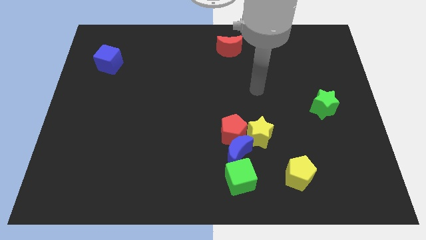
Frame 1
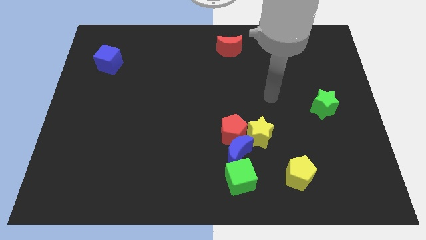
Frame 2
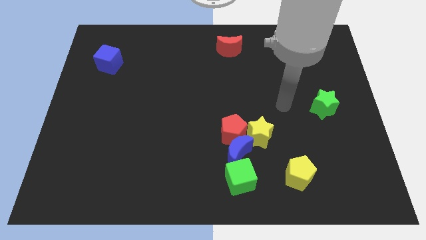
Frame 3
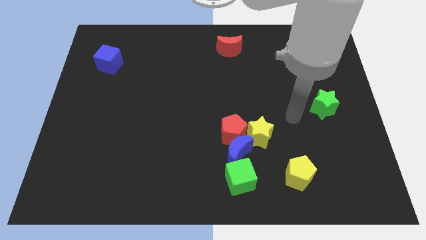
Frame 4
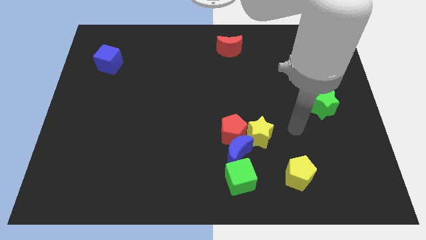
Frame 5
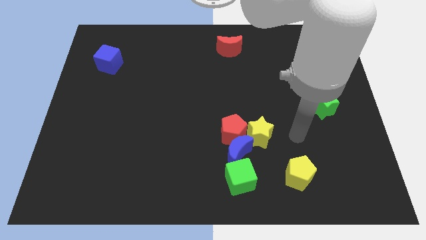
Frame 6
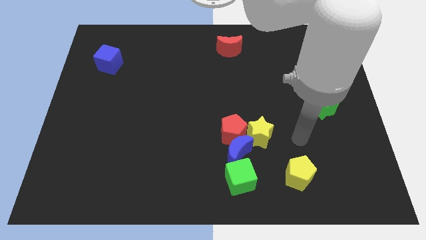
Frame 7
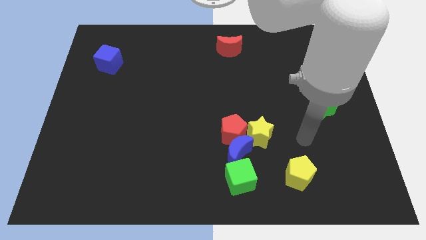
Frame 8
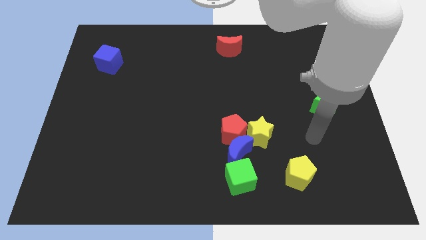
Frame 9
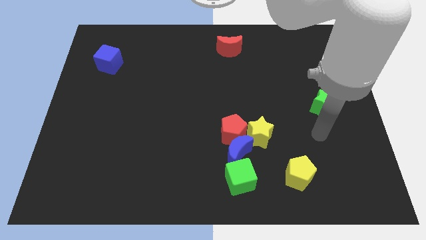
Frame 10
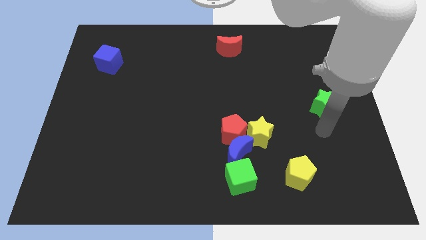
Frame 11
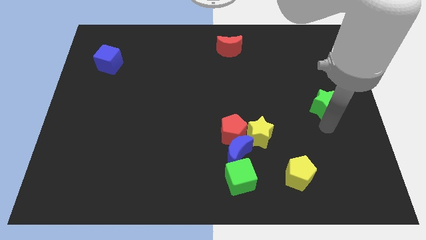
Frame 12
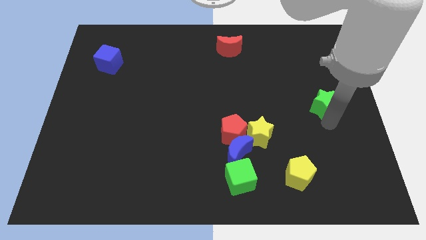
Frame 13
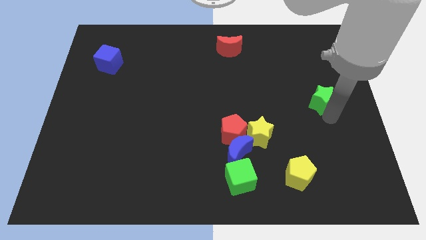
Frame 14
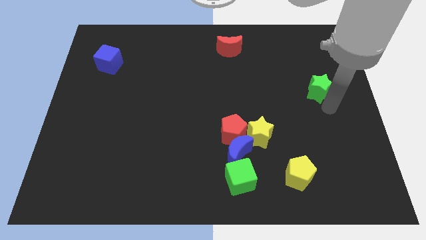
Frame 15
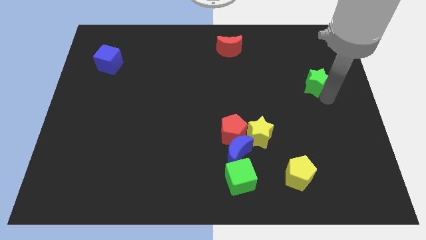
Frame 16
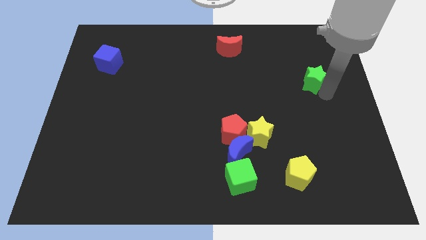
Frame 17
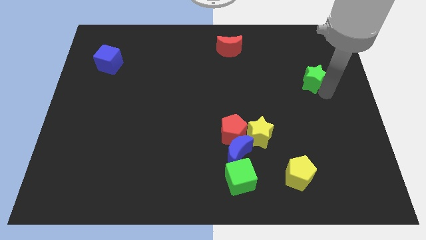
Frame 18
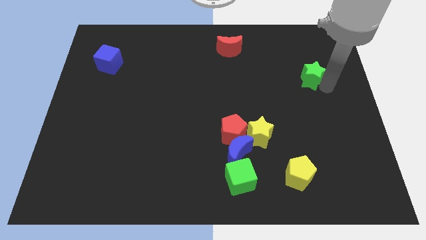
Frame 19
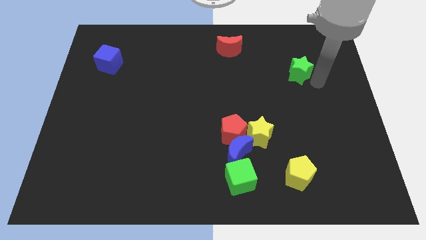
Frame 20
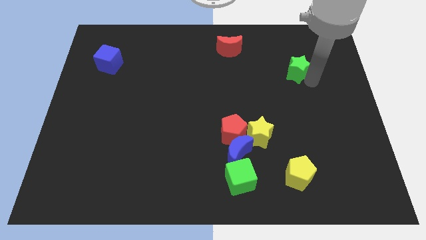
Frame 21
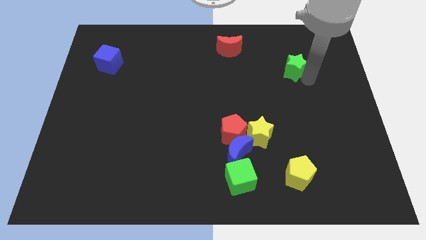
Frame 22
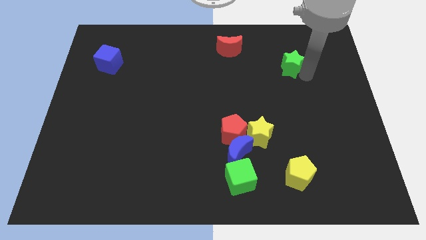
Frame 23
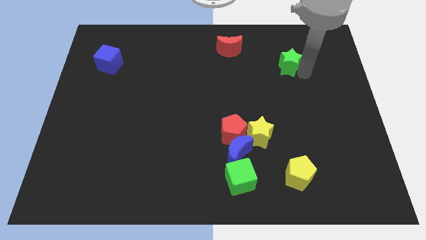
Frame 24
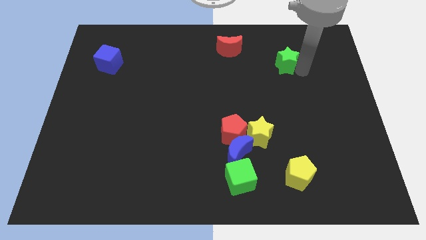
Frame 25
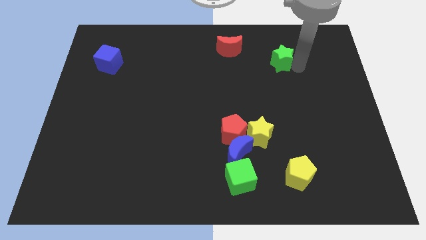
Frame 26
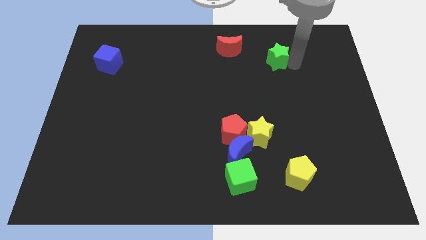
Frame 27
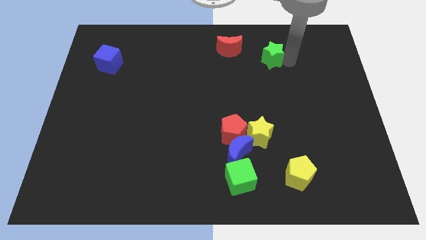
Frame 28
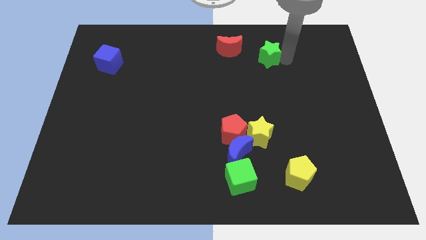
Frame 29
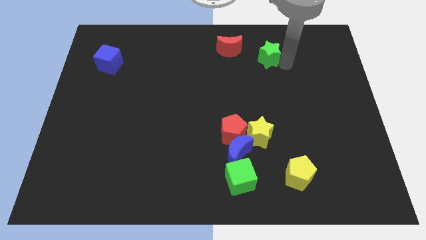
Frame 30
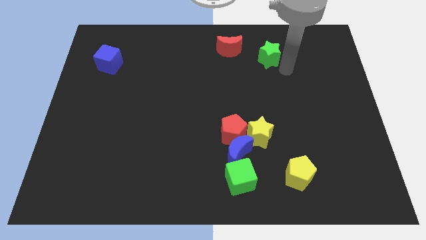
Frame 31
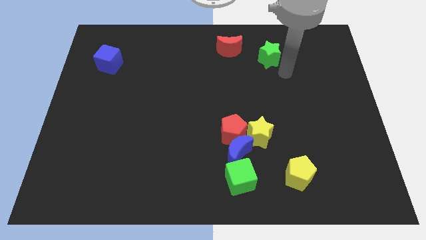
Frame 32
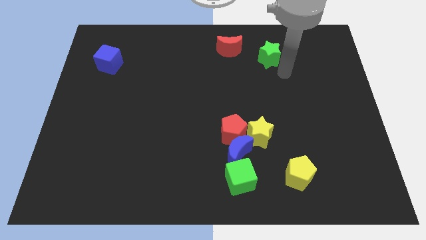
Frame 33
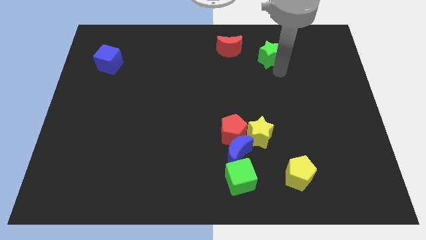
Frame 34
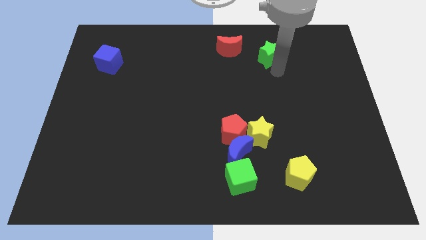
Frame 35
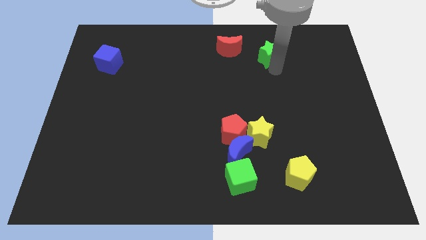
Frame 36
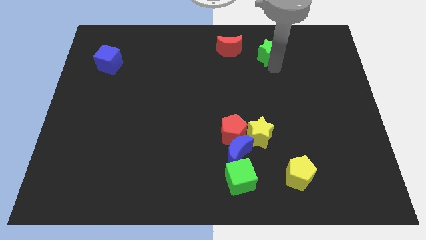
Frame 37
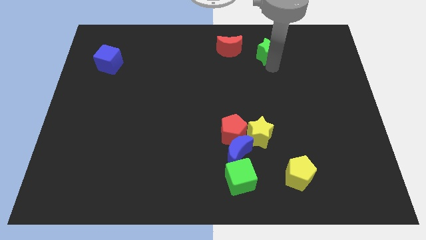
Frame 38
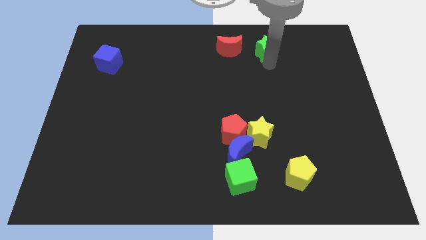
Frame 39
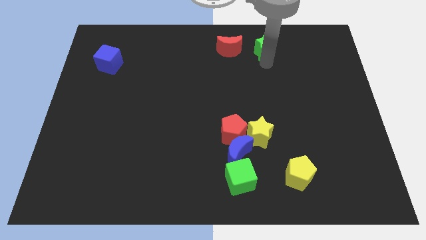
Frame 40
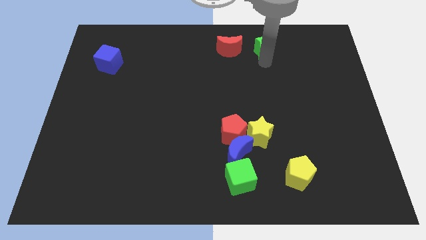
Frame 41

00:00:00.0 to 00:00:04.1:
slide green star to the right of red moon

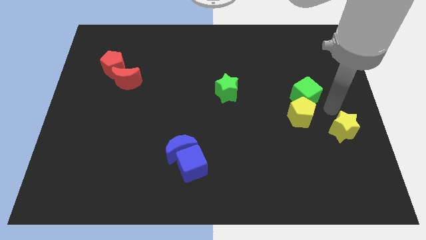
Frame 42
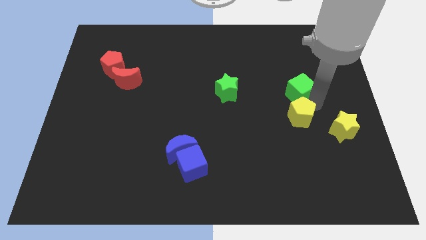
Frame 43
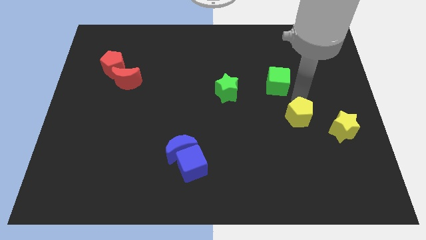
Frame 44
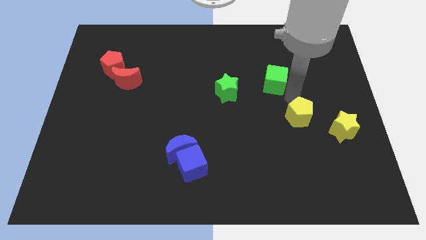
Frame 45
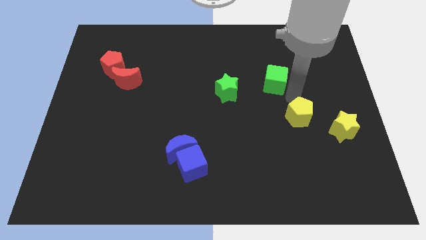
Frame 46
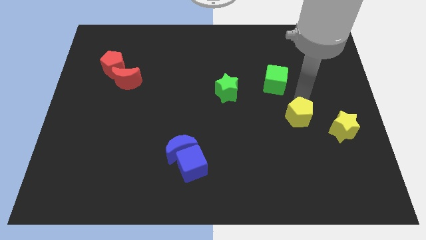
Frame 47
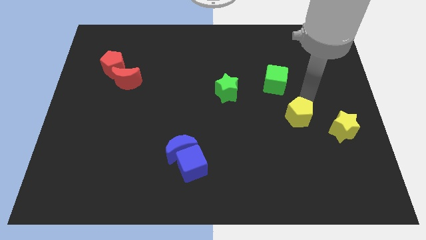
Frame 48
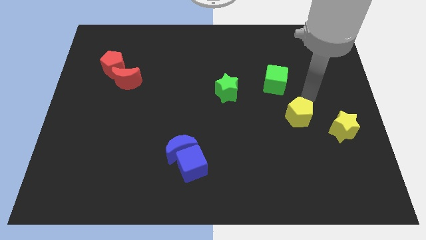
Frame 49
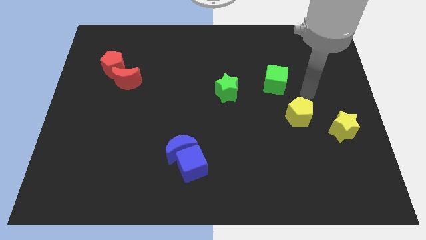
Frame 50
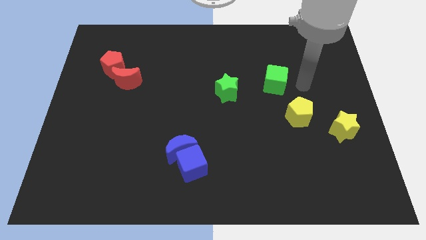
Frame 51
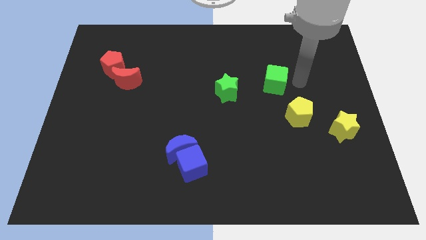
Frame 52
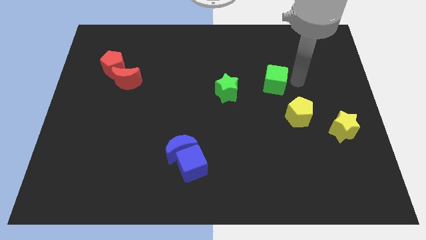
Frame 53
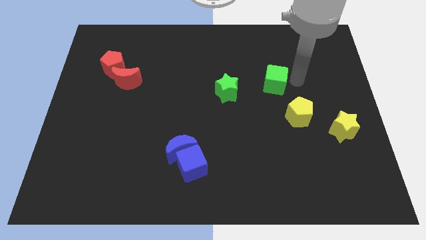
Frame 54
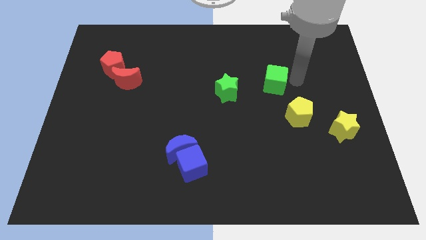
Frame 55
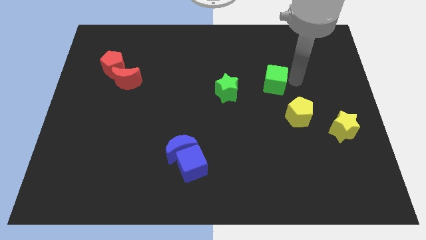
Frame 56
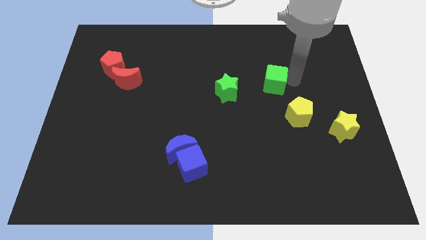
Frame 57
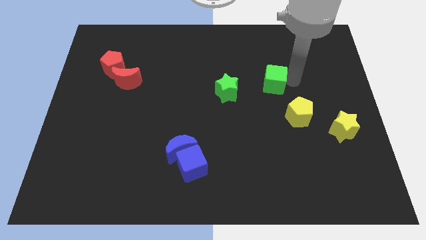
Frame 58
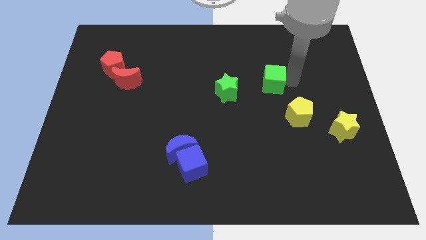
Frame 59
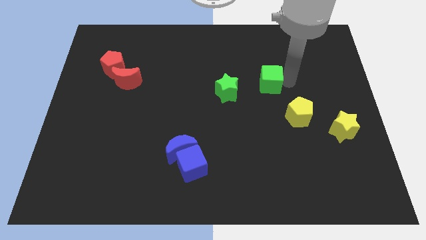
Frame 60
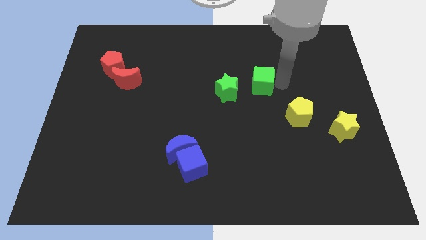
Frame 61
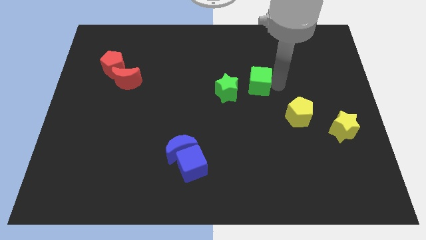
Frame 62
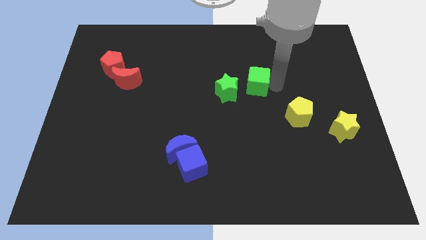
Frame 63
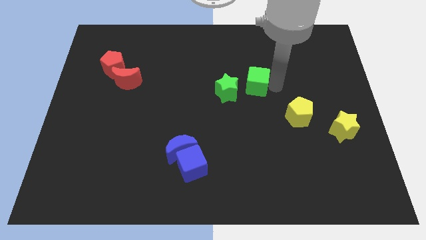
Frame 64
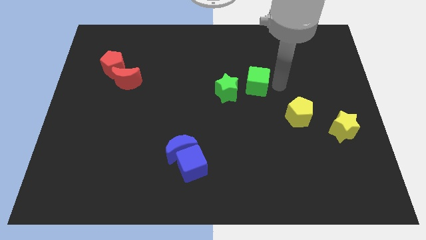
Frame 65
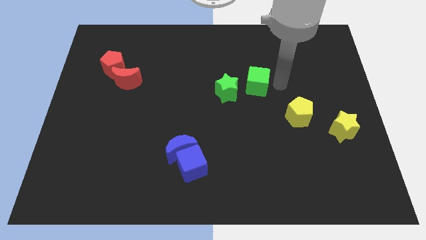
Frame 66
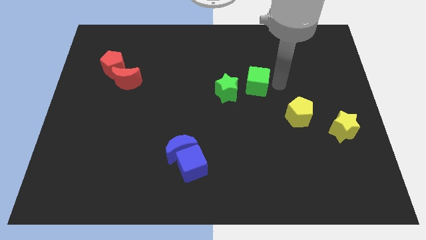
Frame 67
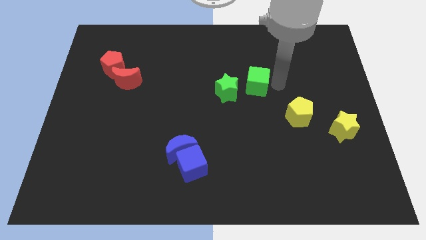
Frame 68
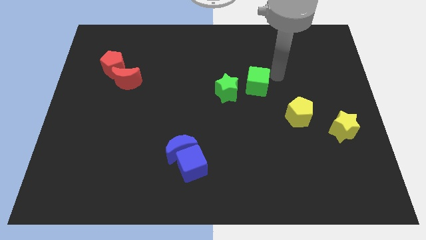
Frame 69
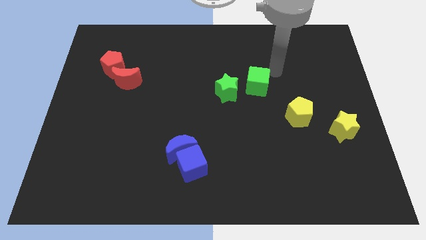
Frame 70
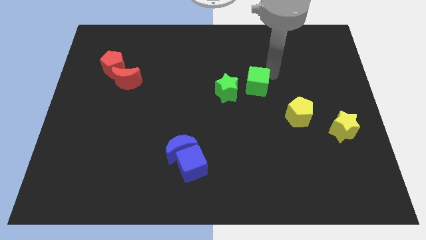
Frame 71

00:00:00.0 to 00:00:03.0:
separate yellow pentagon and green cube

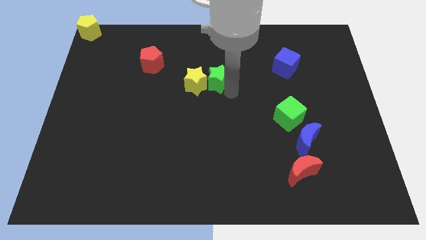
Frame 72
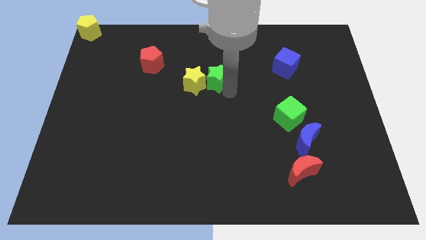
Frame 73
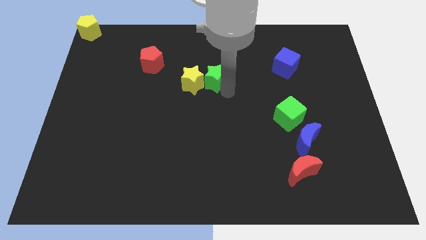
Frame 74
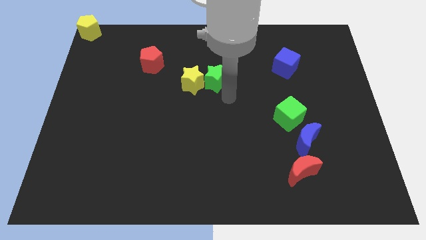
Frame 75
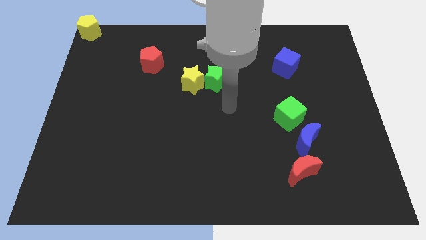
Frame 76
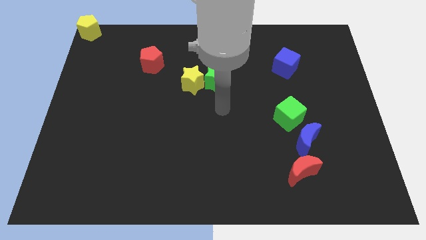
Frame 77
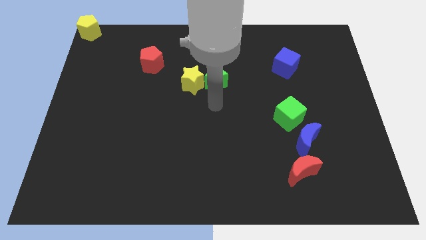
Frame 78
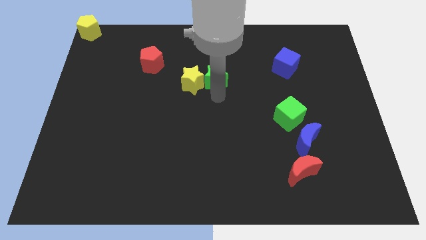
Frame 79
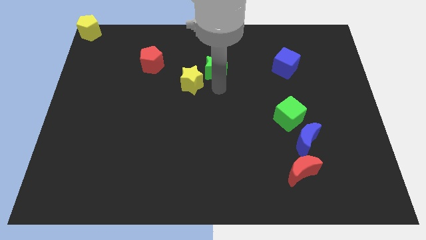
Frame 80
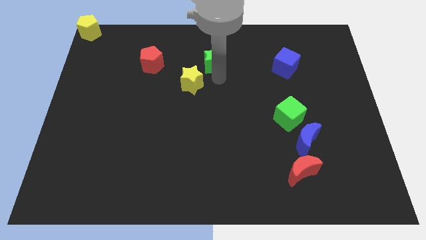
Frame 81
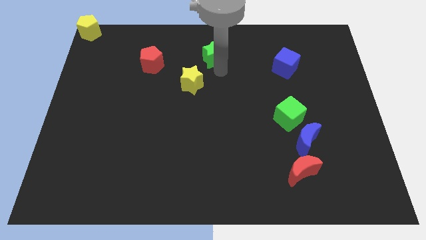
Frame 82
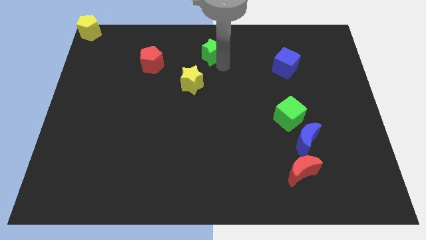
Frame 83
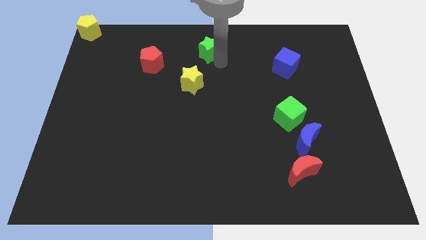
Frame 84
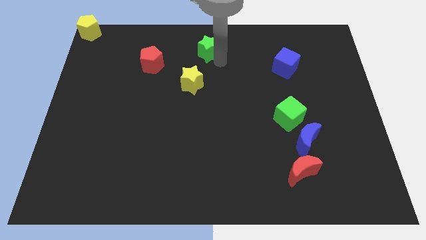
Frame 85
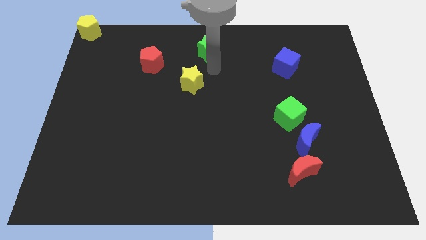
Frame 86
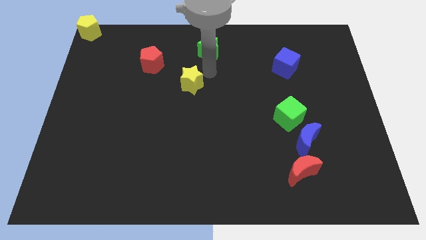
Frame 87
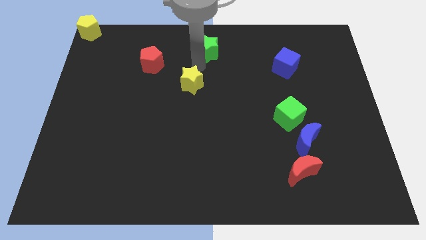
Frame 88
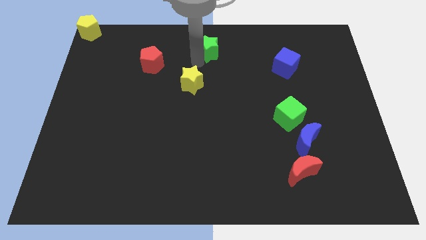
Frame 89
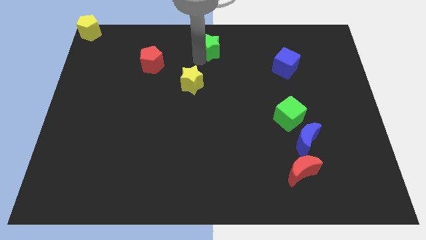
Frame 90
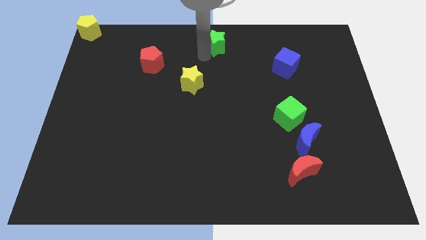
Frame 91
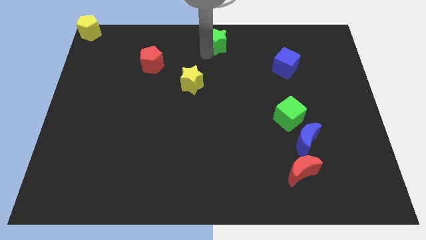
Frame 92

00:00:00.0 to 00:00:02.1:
separate green star from the yellow star
